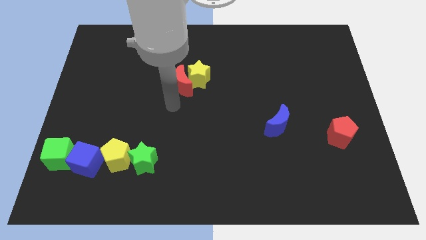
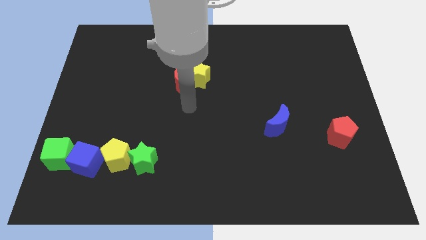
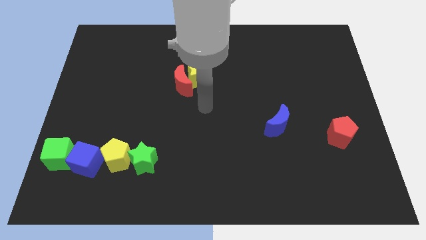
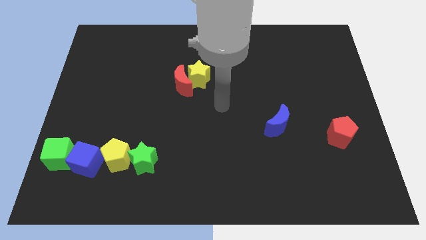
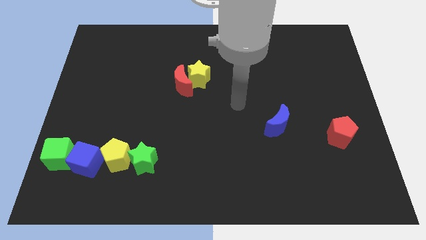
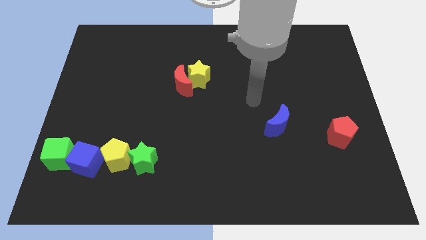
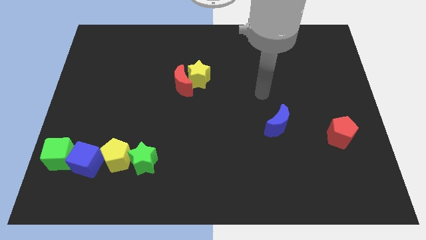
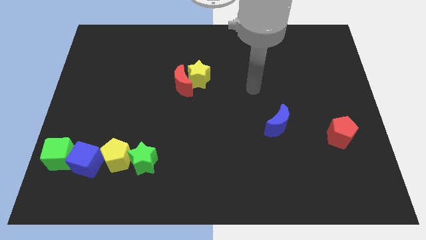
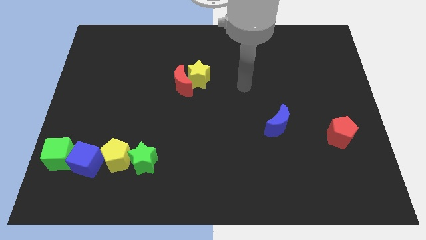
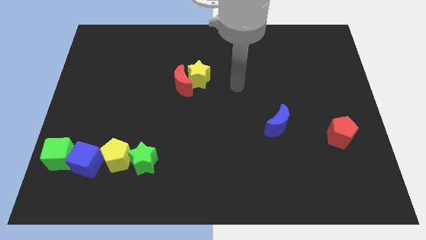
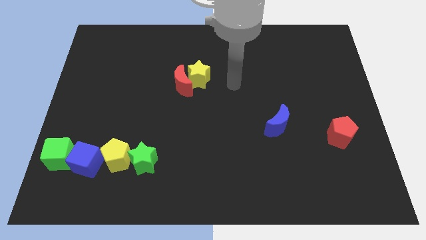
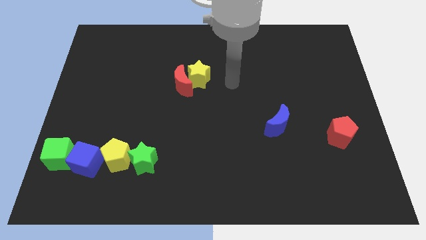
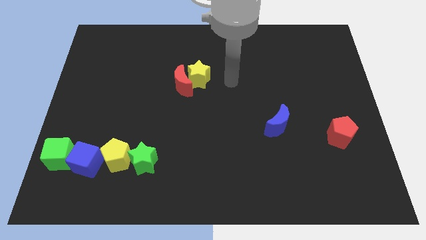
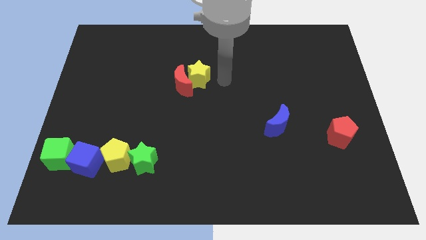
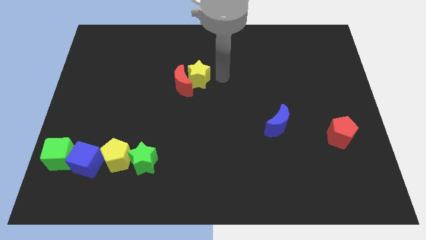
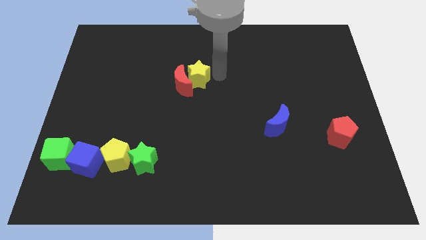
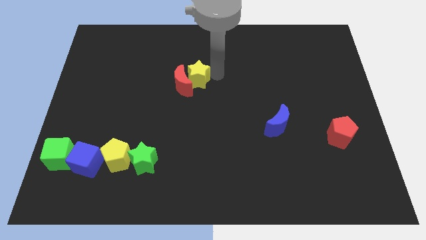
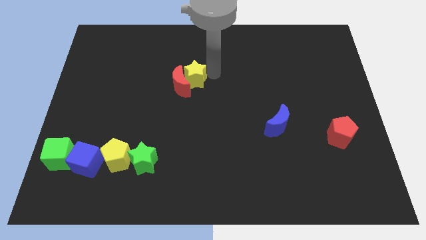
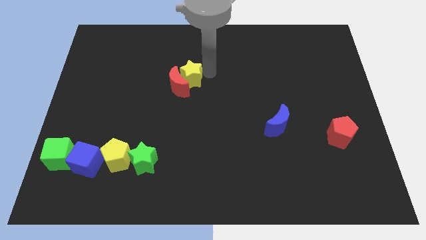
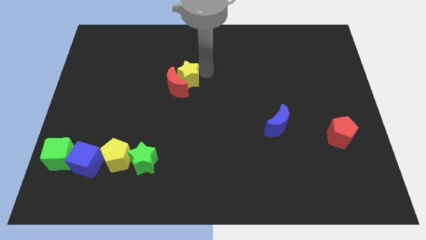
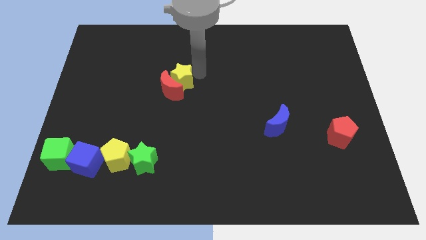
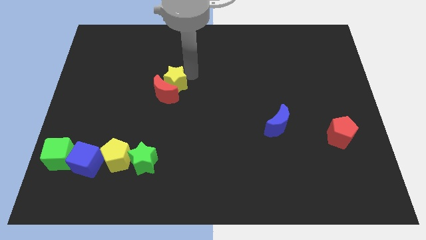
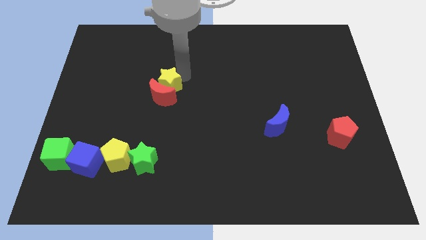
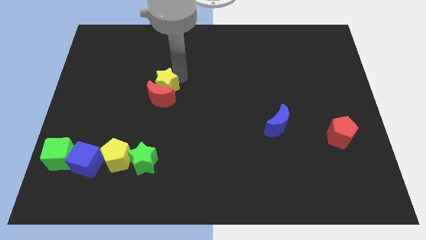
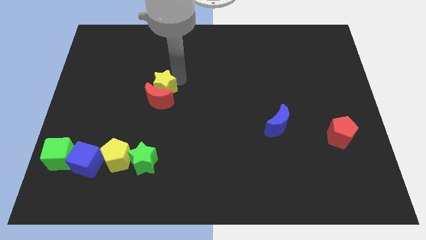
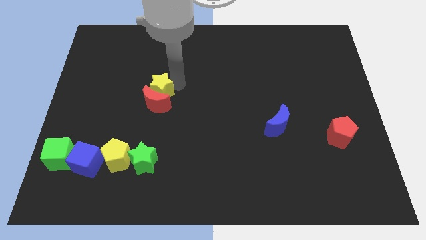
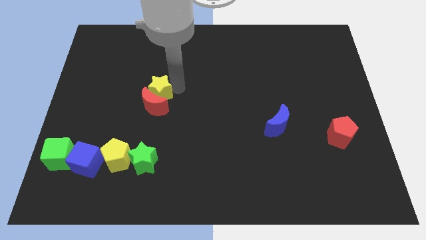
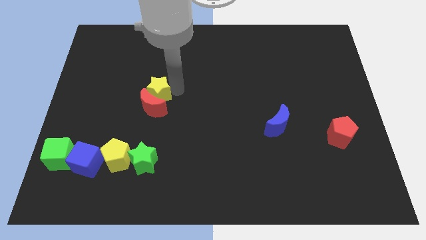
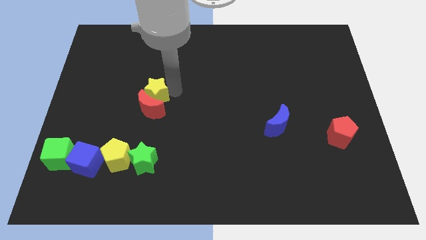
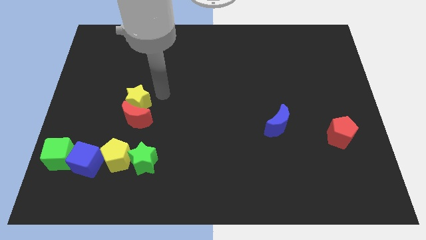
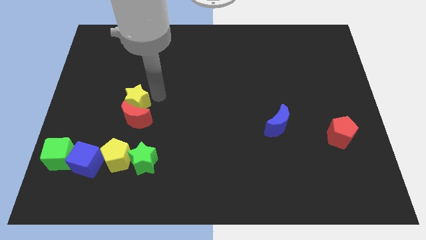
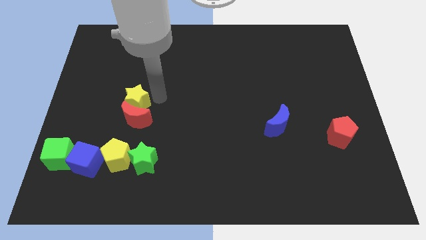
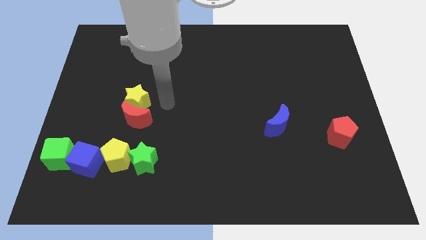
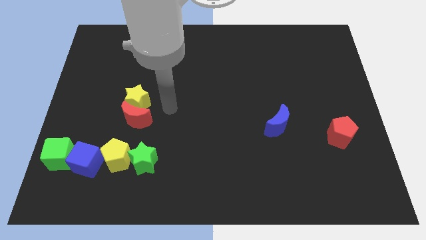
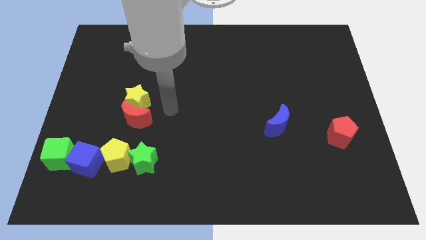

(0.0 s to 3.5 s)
place the yellow star and red crescent above the yellow pentagon

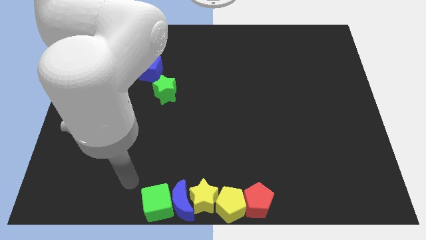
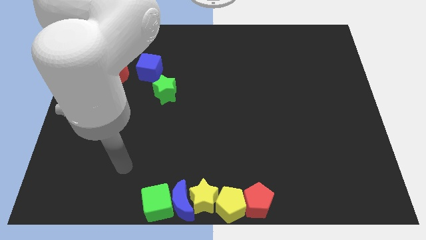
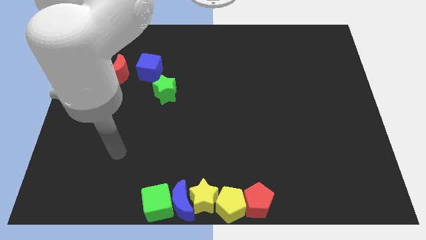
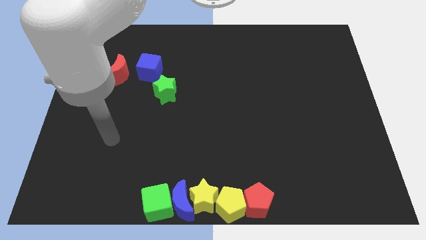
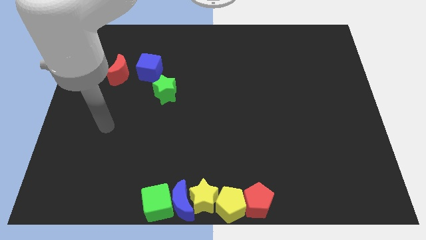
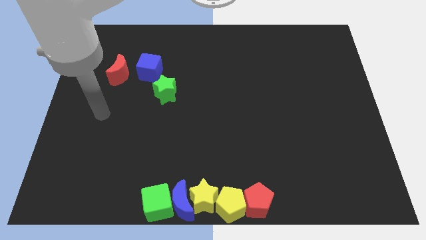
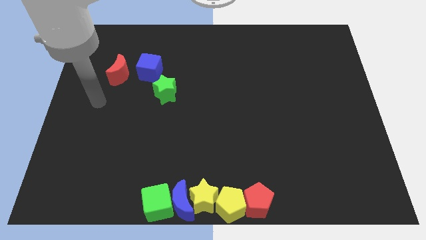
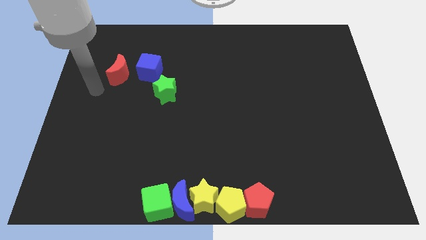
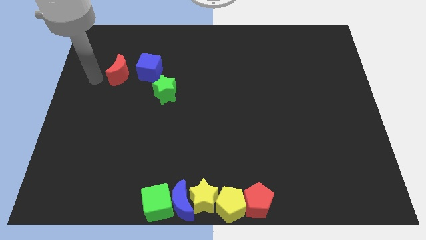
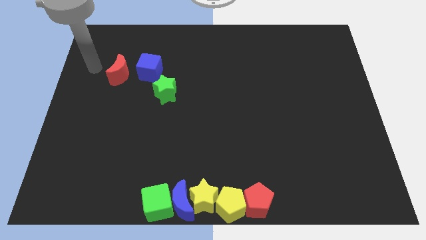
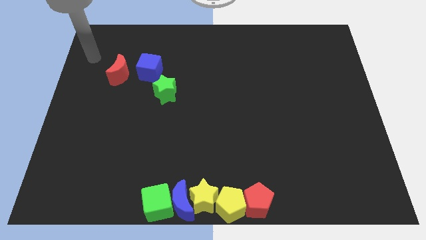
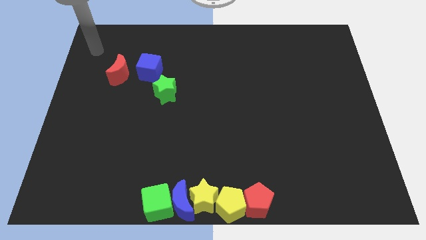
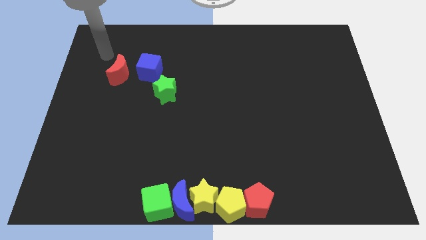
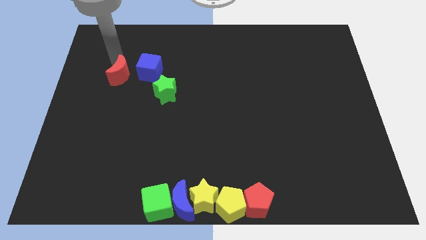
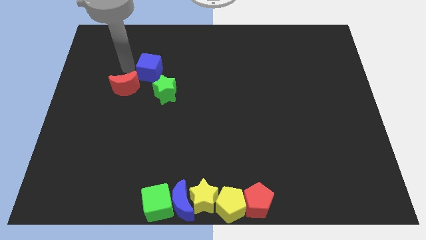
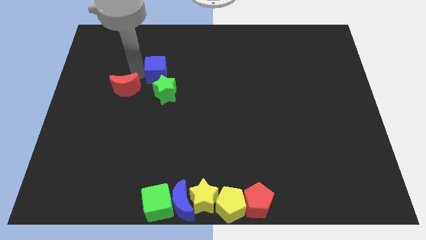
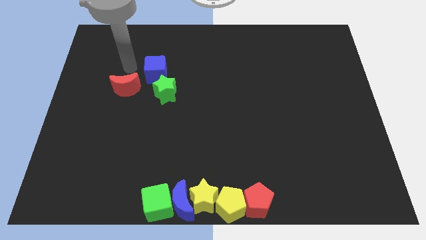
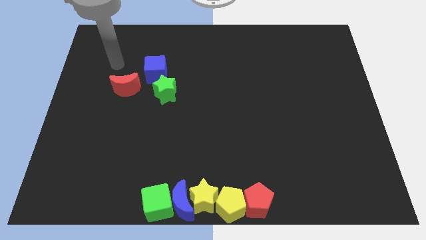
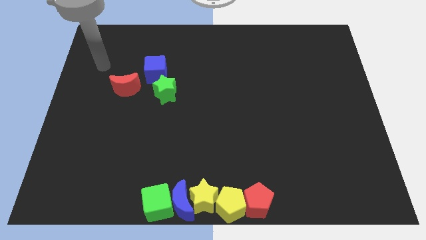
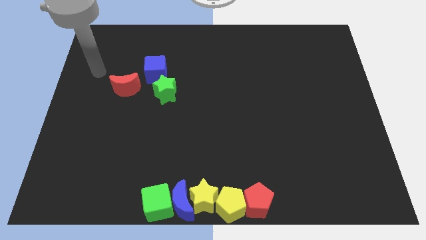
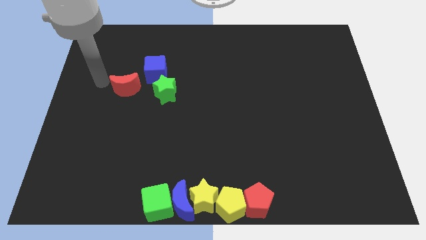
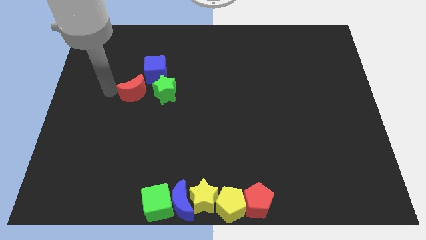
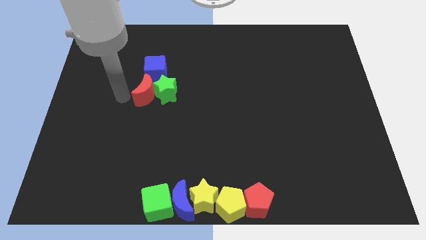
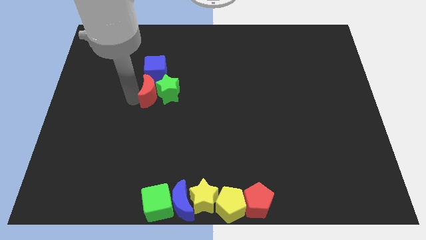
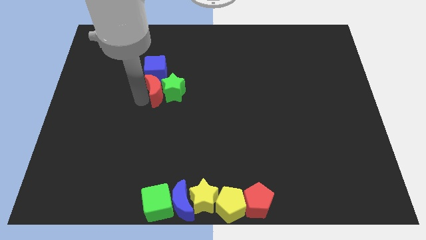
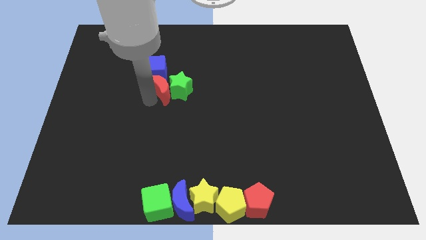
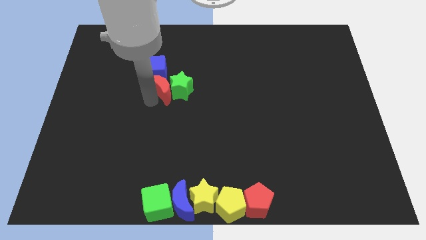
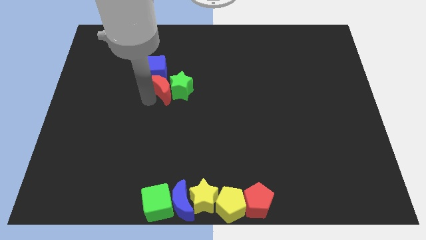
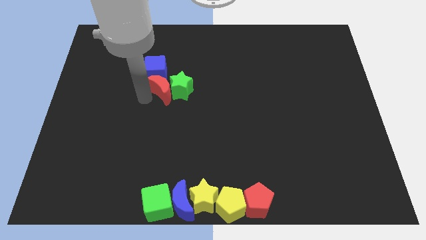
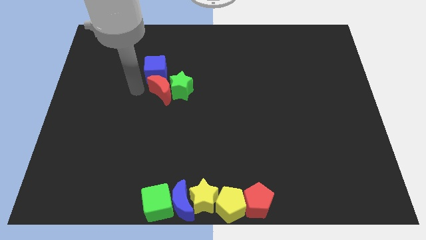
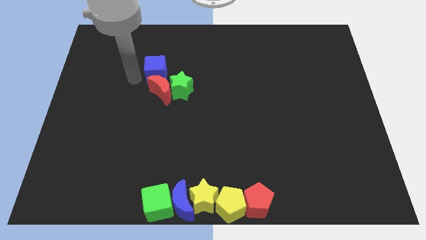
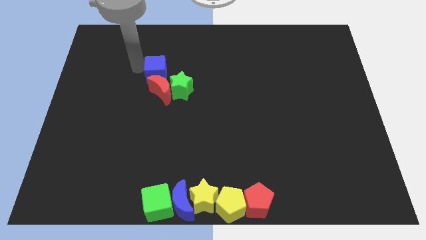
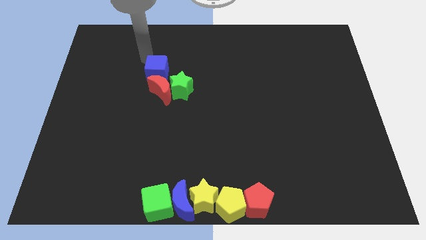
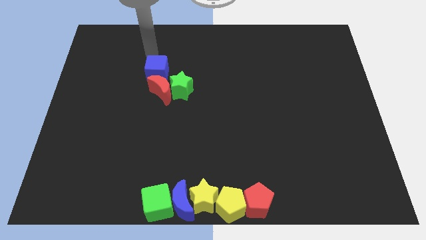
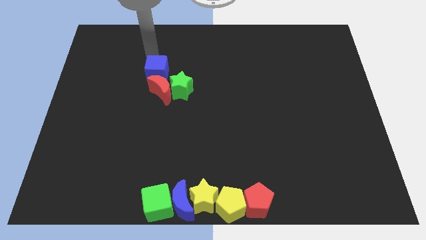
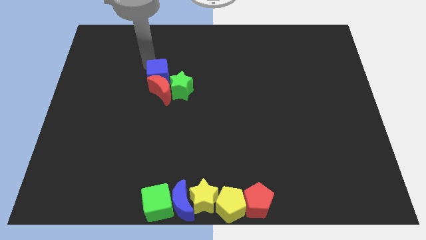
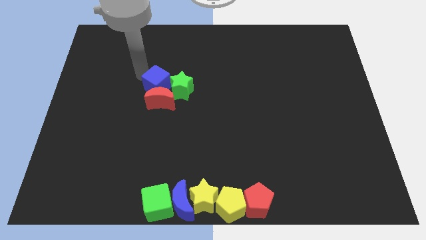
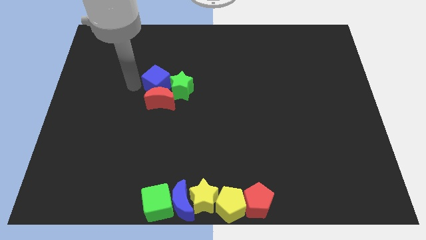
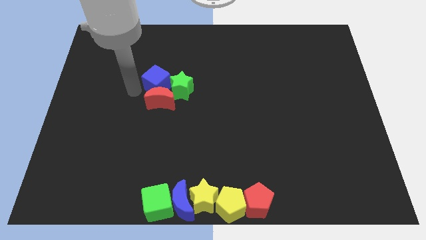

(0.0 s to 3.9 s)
group up the red moon blue cube and green star at the left side of the board

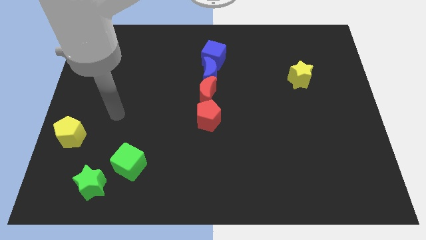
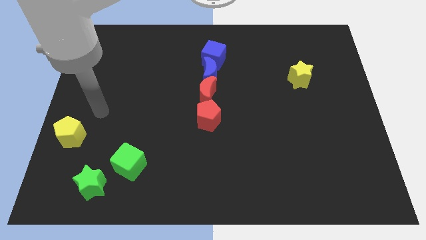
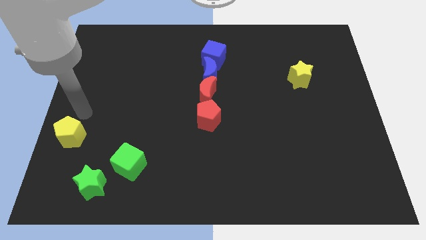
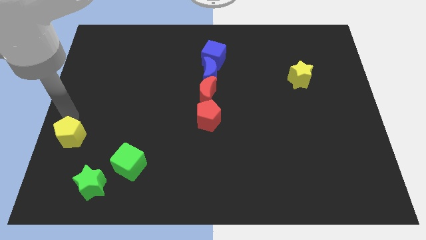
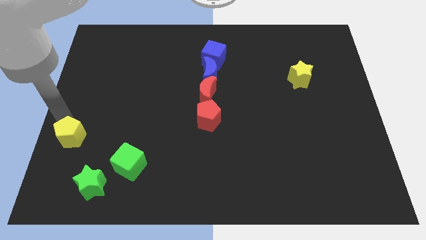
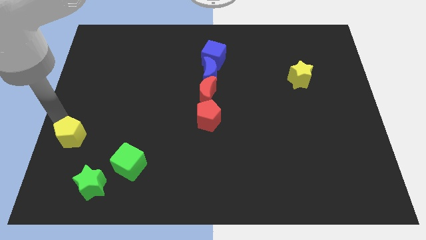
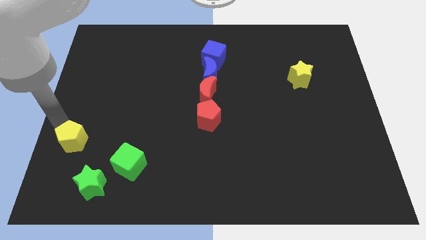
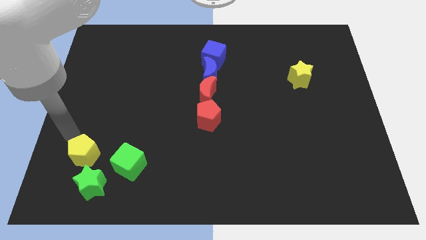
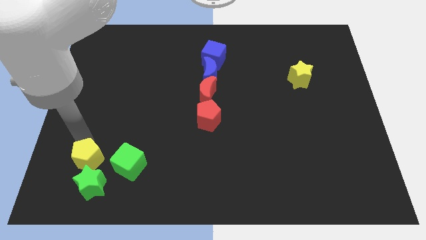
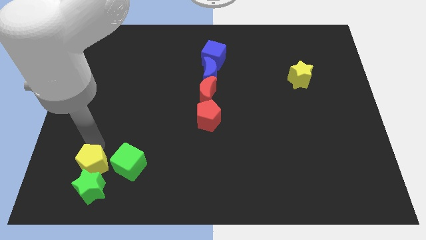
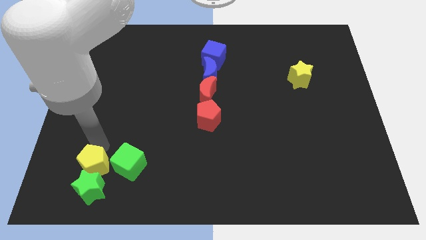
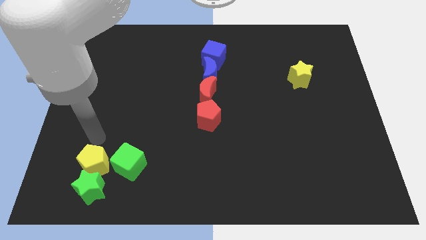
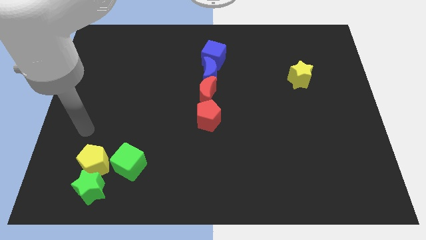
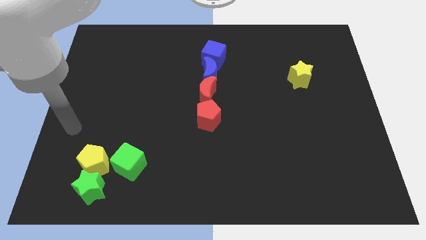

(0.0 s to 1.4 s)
move the yellow pentagon into the green star
